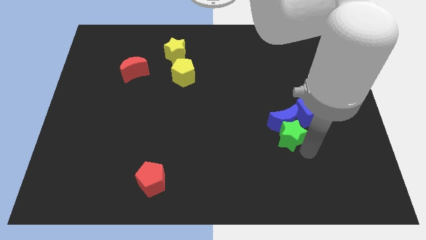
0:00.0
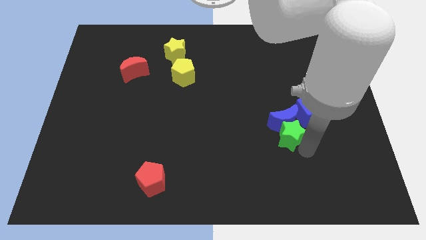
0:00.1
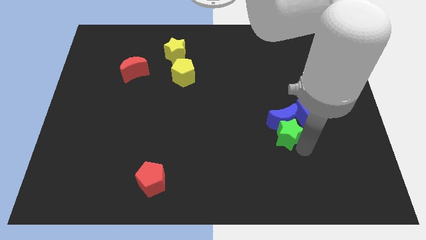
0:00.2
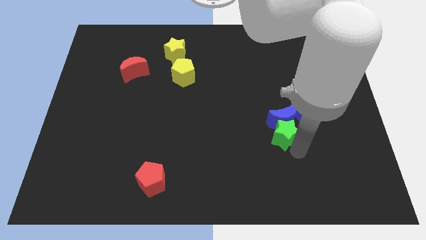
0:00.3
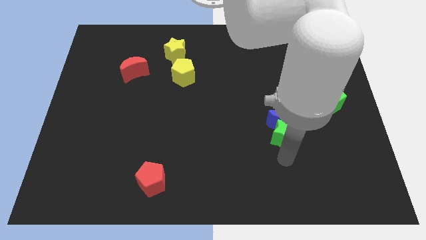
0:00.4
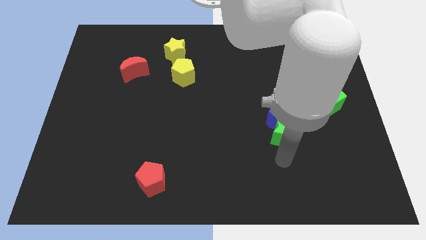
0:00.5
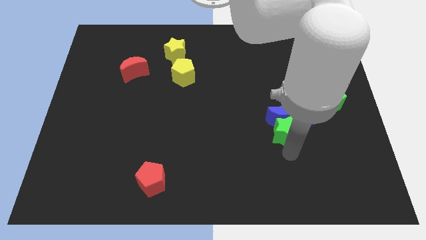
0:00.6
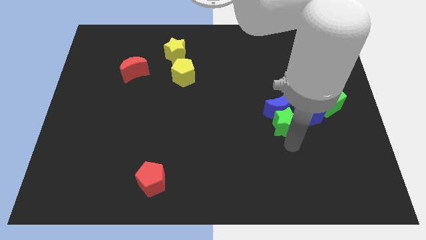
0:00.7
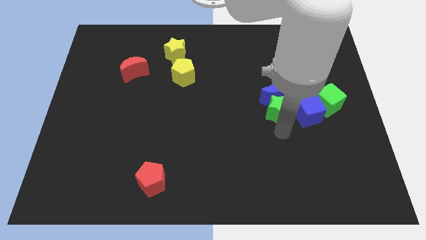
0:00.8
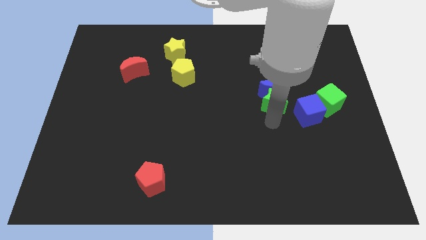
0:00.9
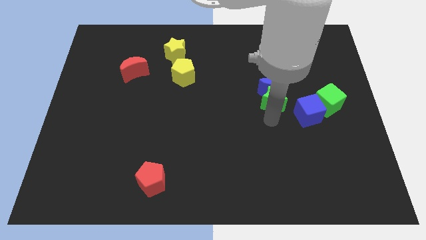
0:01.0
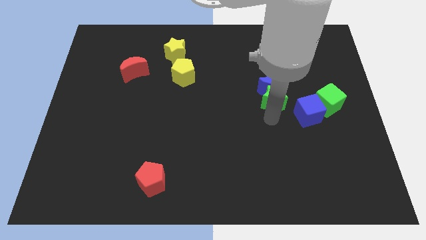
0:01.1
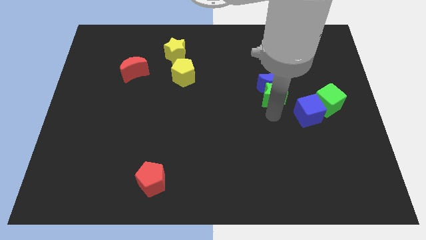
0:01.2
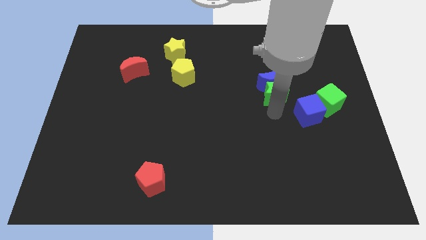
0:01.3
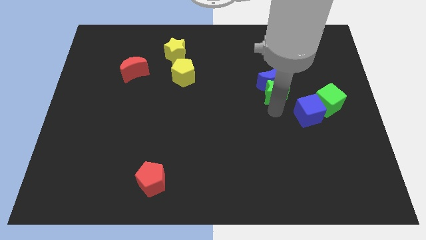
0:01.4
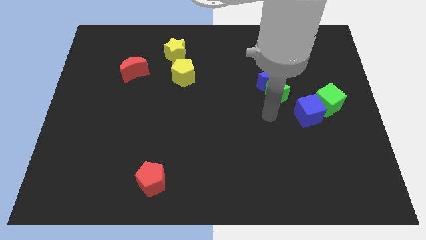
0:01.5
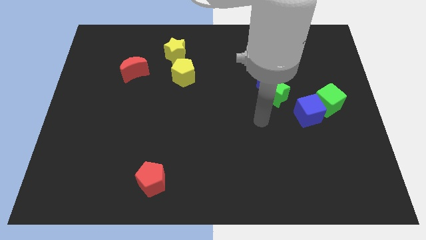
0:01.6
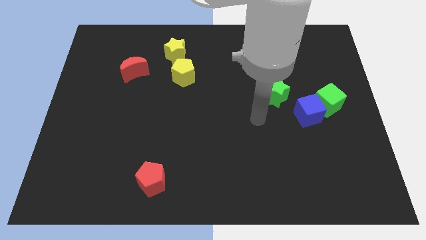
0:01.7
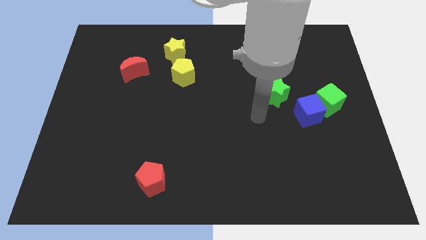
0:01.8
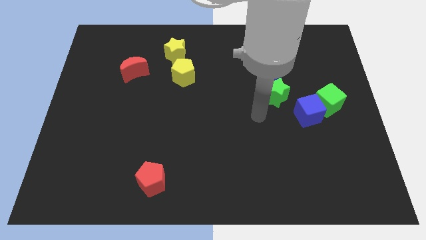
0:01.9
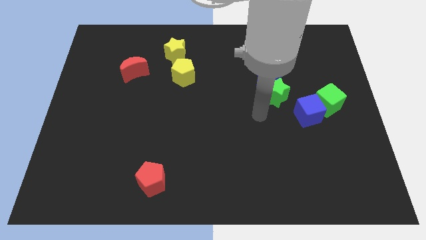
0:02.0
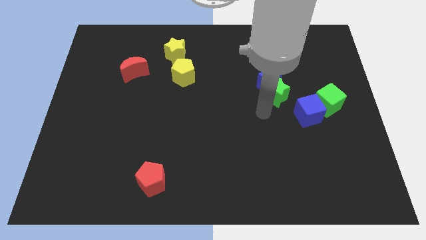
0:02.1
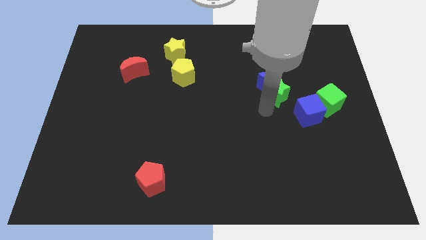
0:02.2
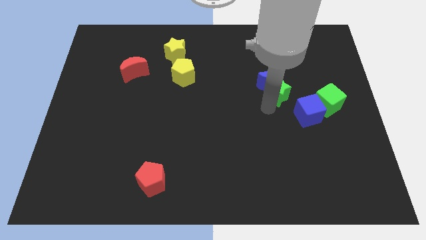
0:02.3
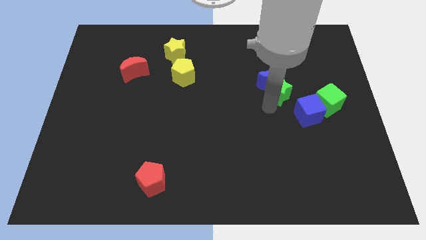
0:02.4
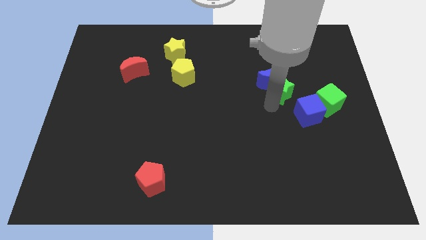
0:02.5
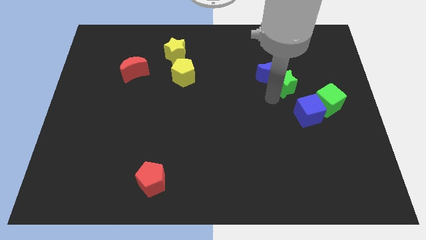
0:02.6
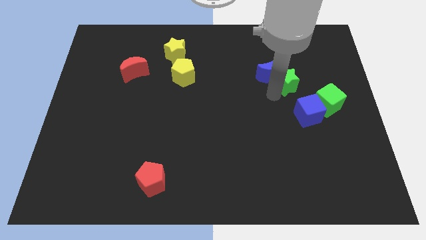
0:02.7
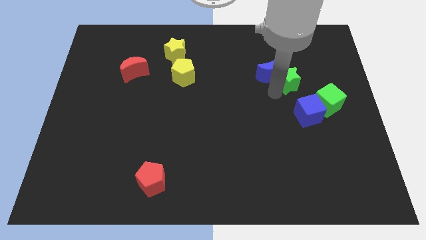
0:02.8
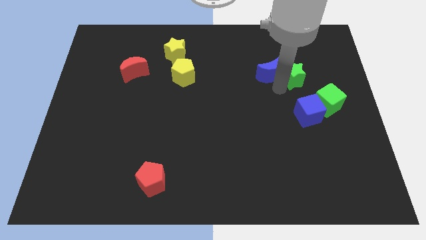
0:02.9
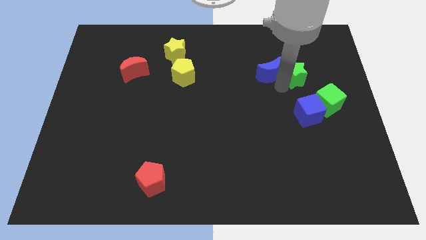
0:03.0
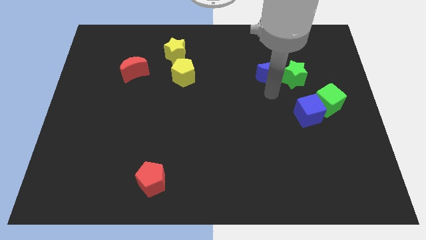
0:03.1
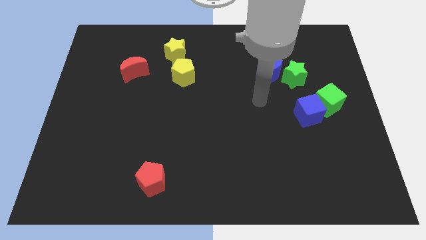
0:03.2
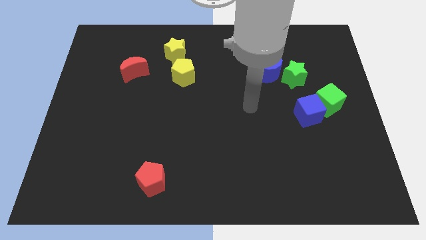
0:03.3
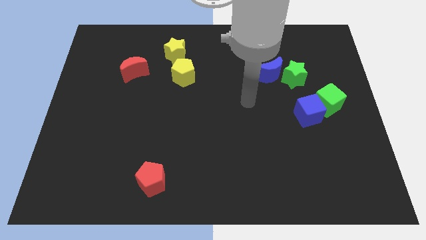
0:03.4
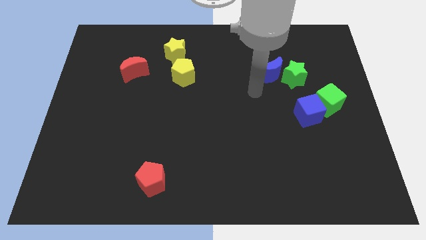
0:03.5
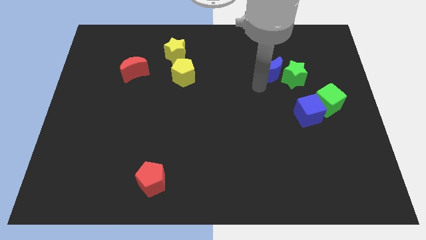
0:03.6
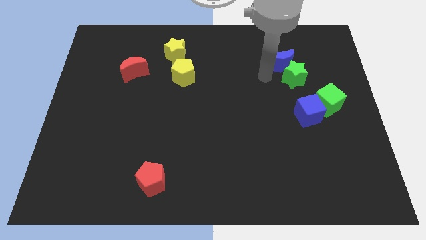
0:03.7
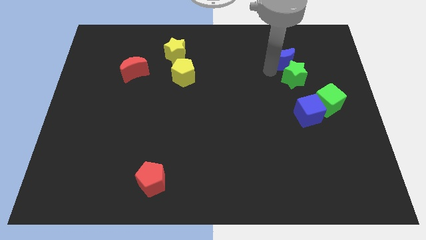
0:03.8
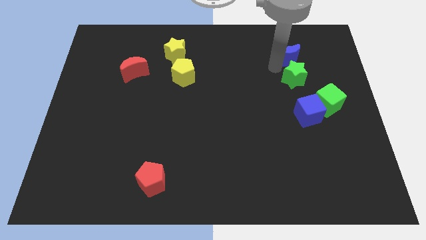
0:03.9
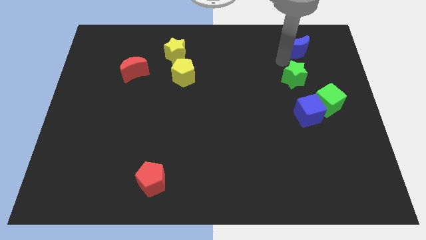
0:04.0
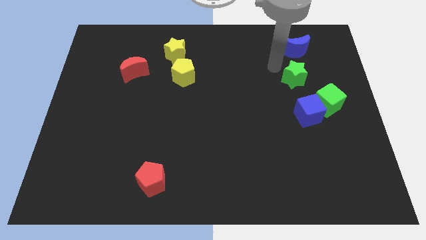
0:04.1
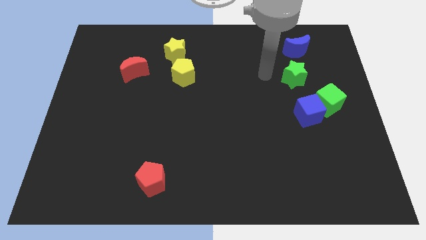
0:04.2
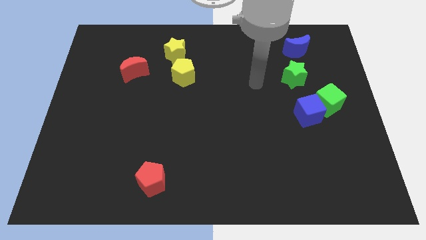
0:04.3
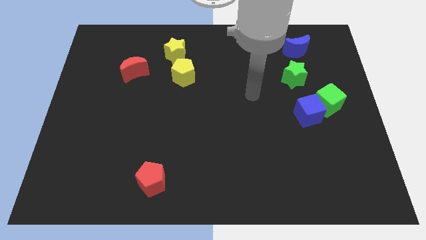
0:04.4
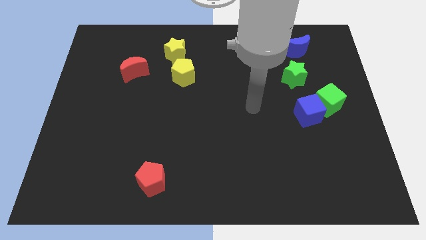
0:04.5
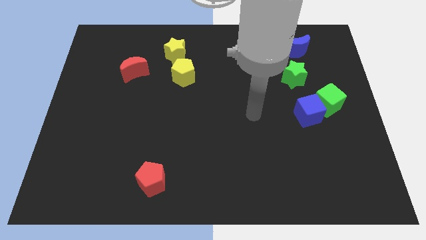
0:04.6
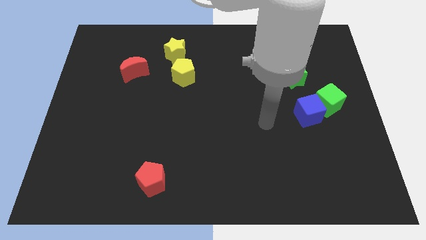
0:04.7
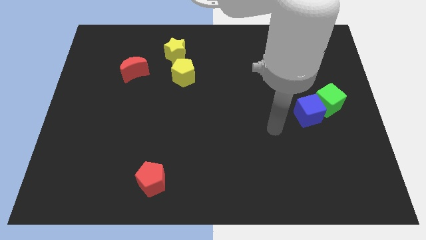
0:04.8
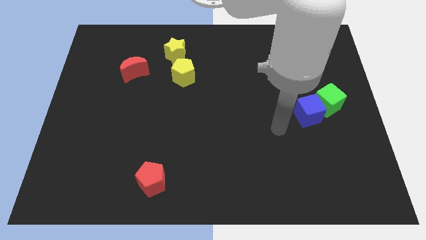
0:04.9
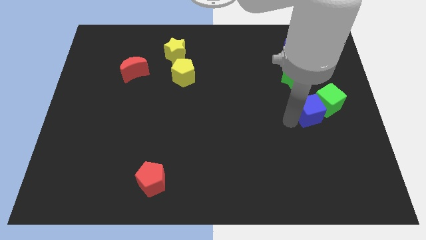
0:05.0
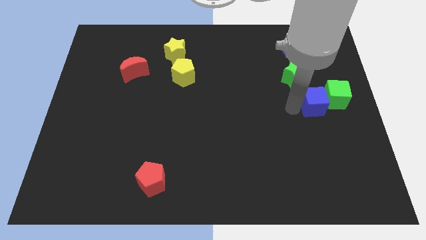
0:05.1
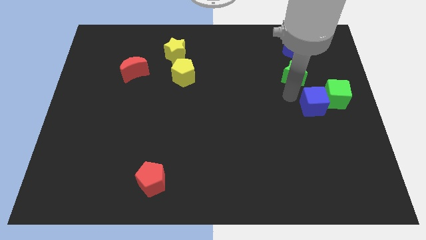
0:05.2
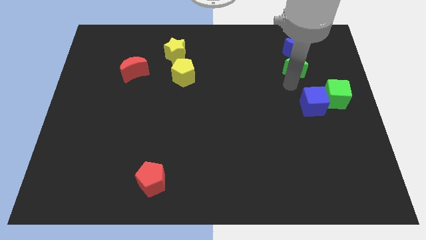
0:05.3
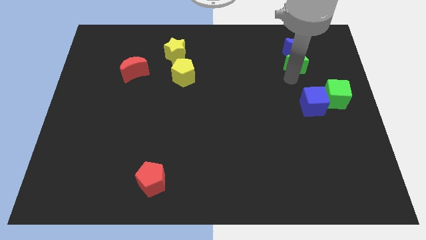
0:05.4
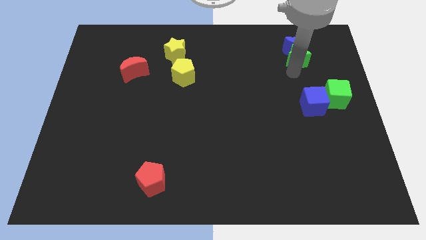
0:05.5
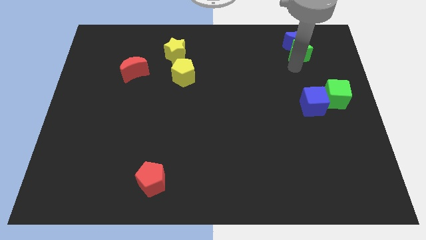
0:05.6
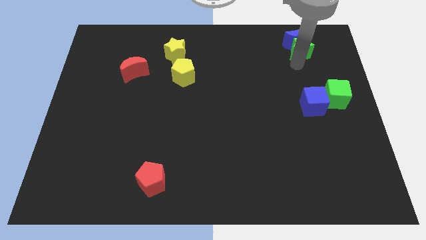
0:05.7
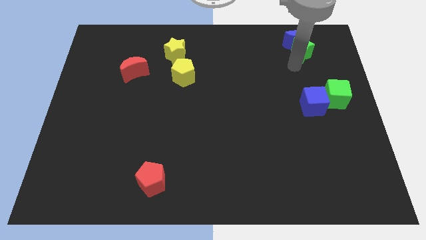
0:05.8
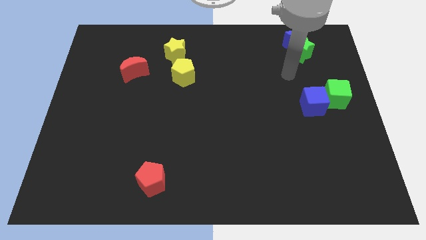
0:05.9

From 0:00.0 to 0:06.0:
move the green star and the blue crescent to the top of the blue cube

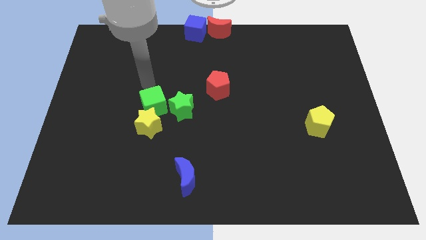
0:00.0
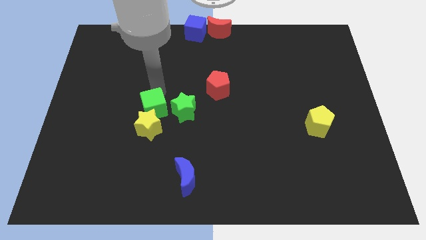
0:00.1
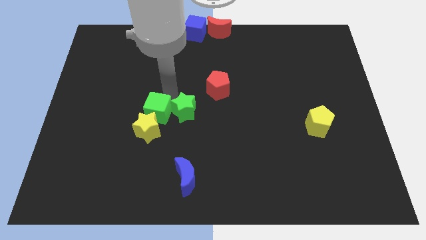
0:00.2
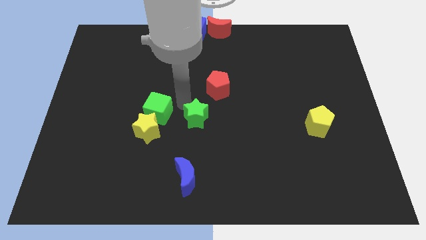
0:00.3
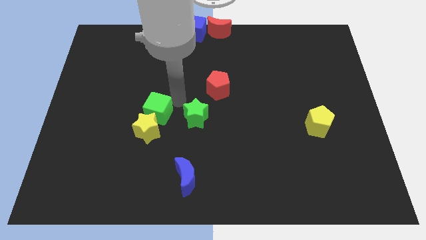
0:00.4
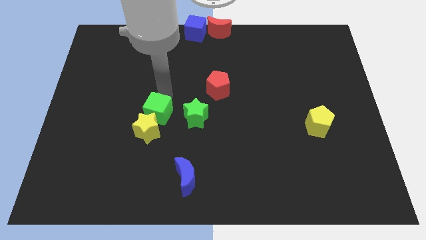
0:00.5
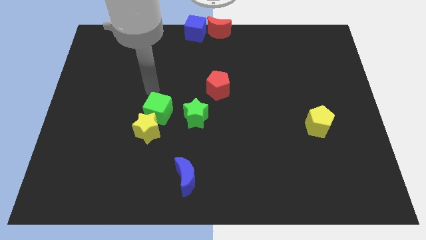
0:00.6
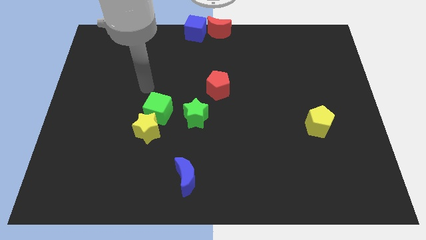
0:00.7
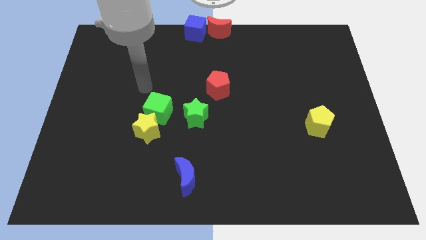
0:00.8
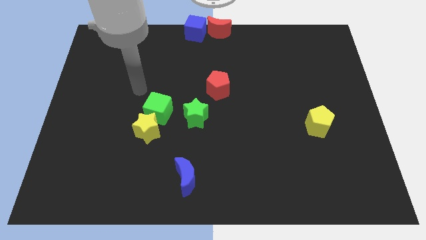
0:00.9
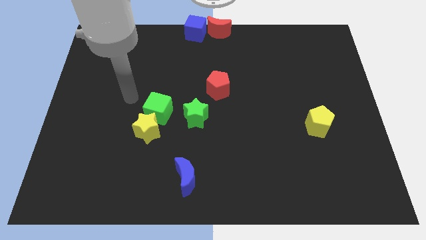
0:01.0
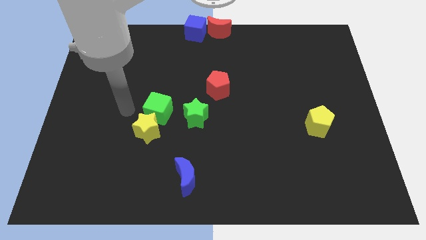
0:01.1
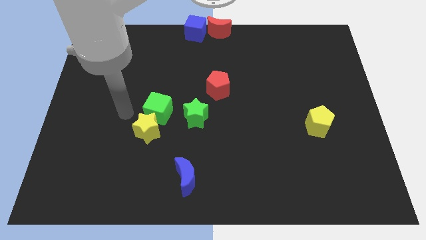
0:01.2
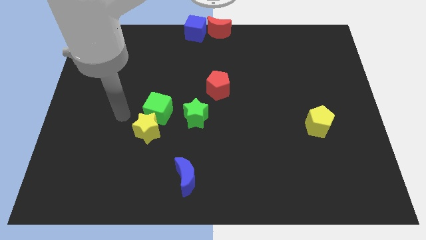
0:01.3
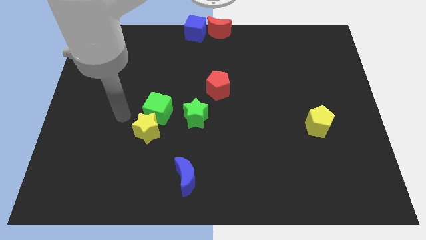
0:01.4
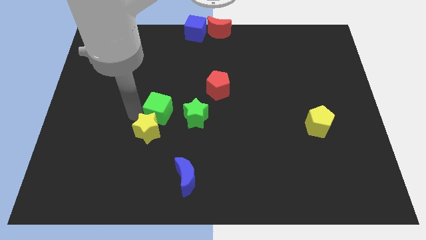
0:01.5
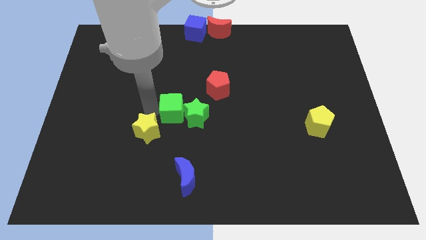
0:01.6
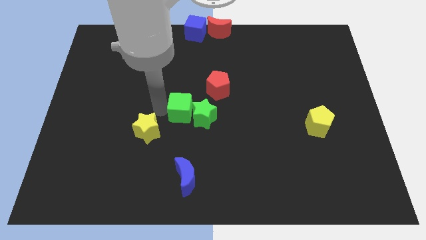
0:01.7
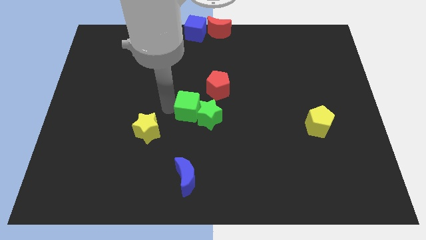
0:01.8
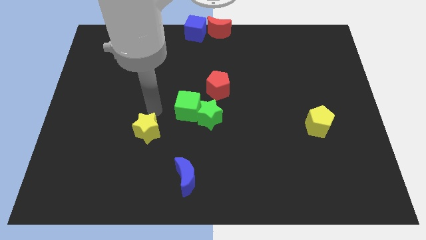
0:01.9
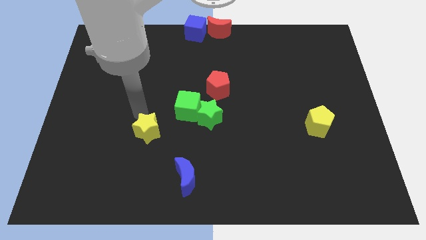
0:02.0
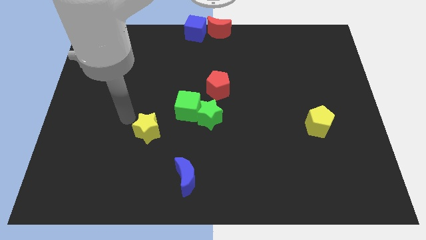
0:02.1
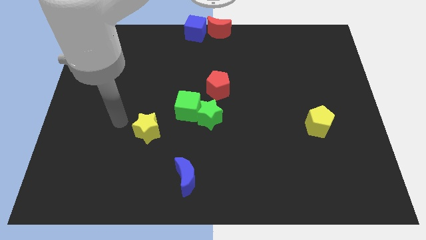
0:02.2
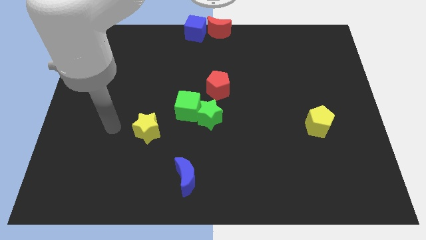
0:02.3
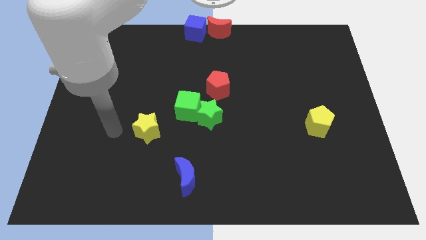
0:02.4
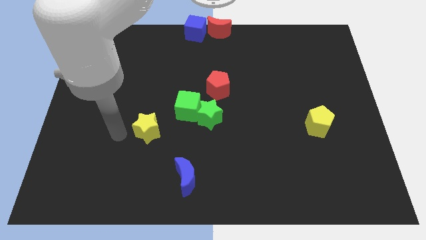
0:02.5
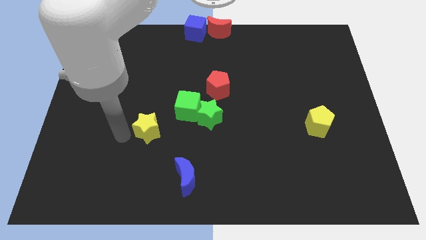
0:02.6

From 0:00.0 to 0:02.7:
push green cube into the green star

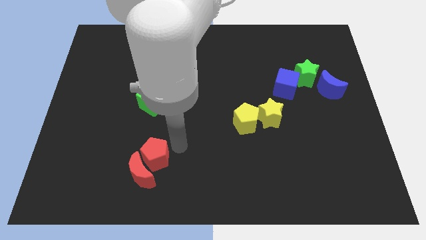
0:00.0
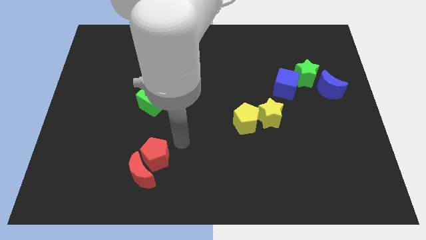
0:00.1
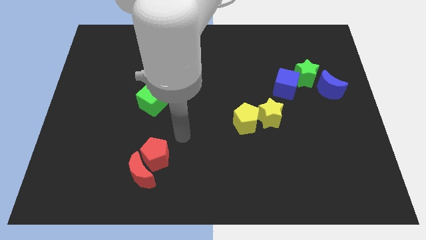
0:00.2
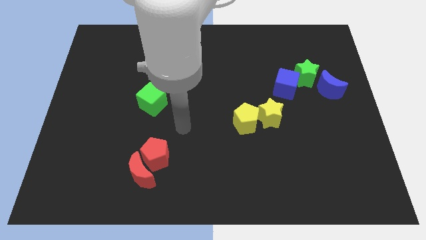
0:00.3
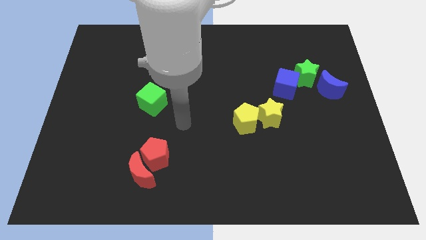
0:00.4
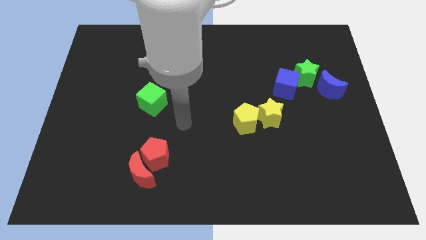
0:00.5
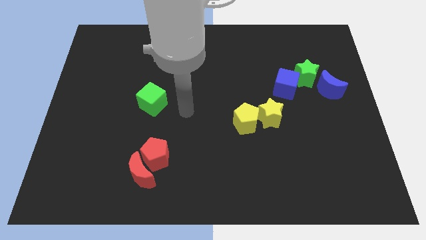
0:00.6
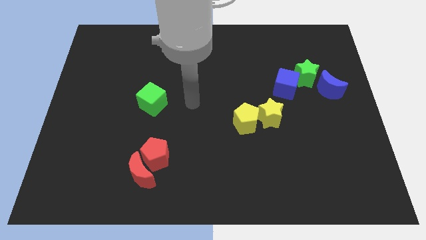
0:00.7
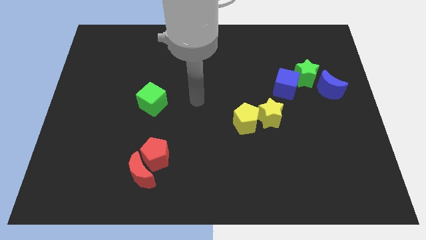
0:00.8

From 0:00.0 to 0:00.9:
move your arm away from the red pentagon
